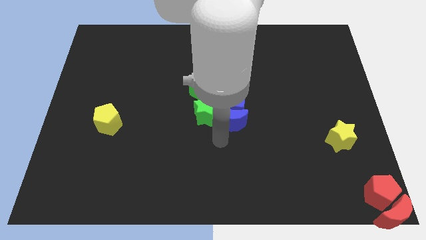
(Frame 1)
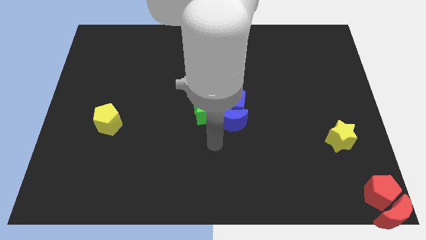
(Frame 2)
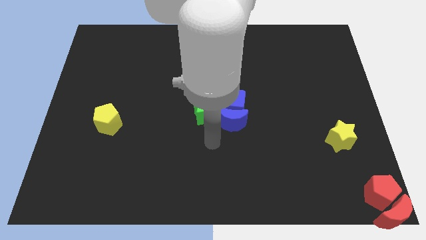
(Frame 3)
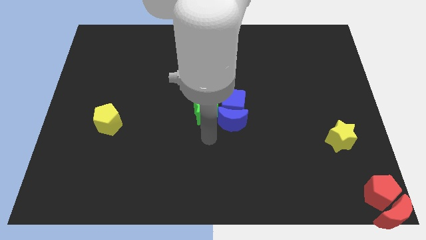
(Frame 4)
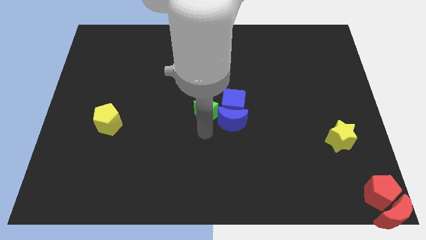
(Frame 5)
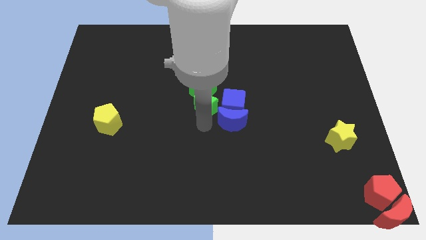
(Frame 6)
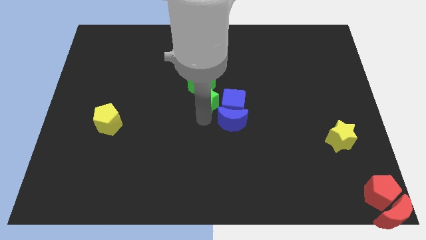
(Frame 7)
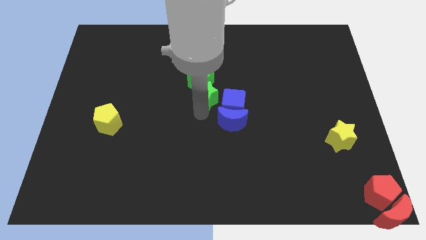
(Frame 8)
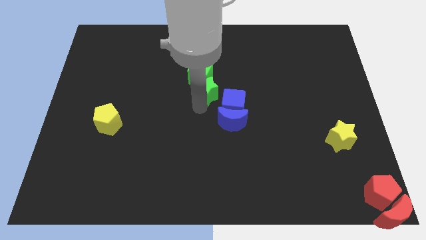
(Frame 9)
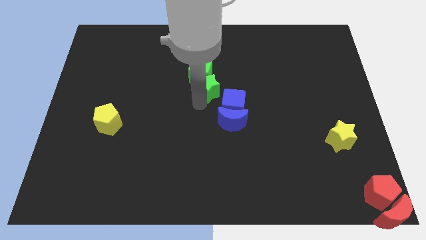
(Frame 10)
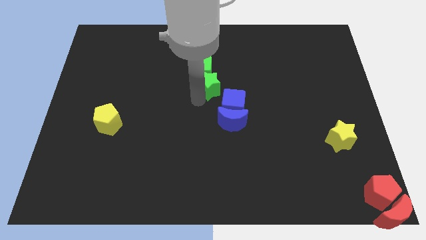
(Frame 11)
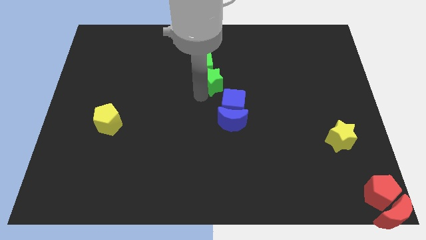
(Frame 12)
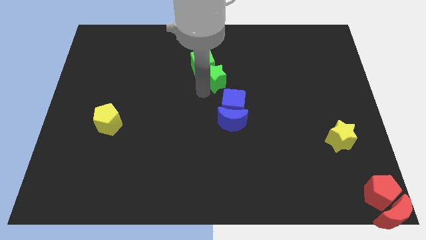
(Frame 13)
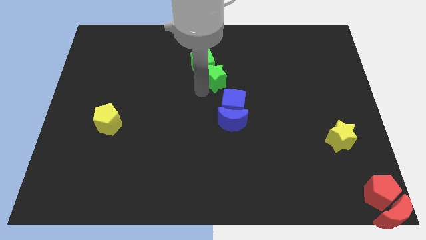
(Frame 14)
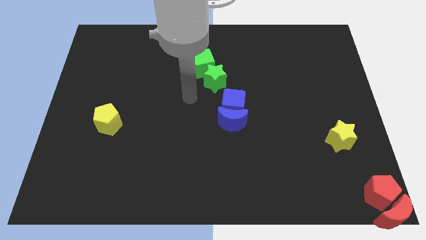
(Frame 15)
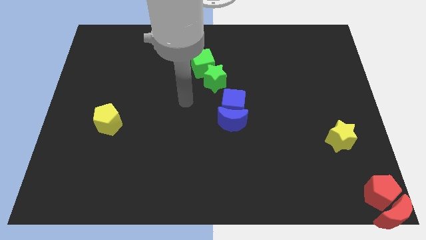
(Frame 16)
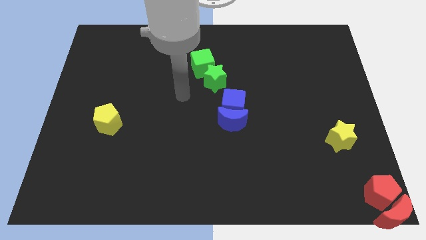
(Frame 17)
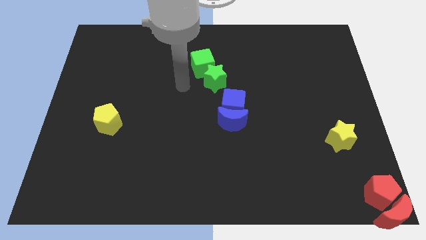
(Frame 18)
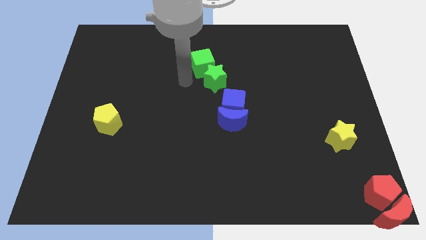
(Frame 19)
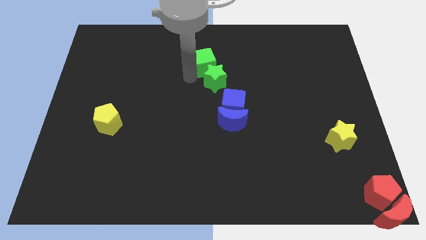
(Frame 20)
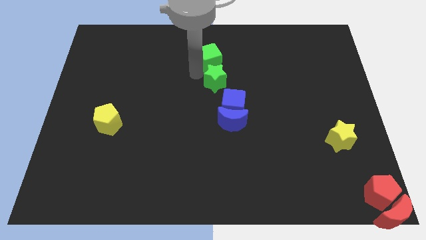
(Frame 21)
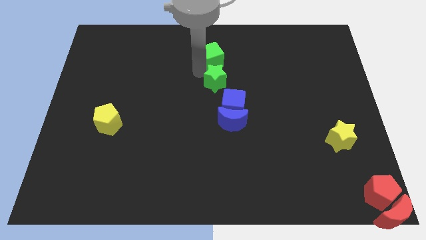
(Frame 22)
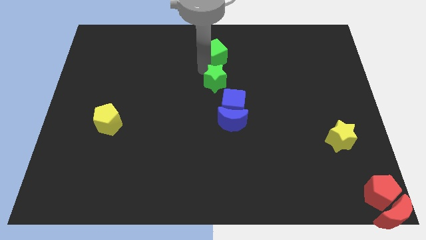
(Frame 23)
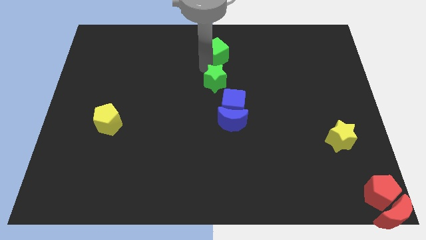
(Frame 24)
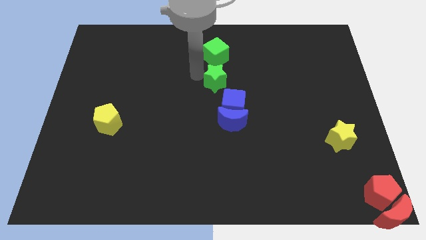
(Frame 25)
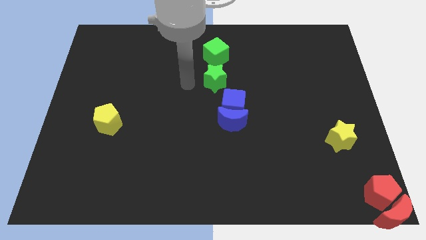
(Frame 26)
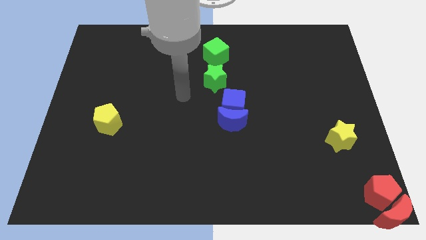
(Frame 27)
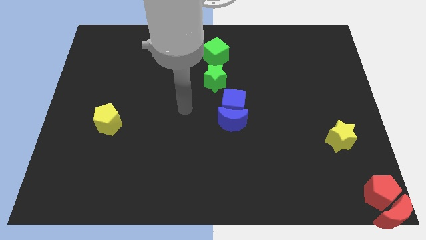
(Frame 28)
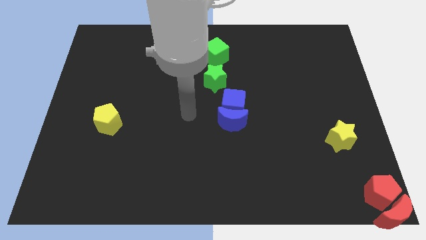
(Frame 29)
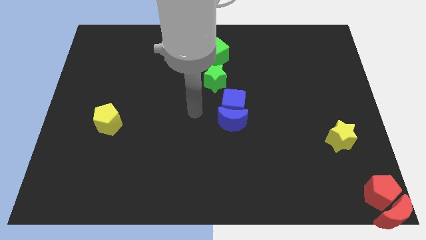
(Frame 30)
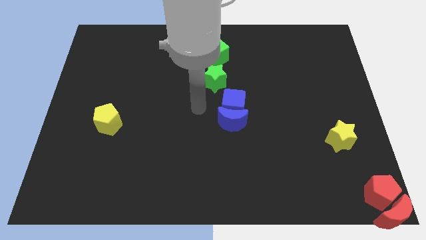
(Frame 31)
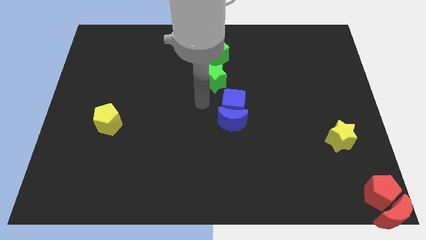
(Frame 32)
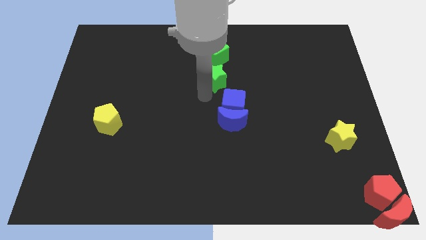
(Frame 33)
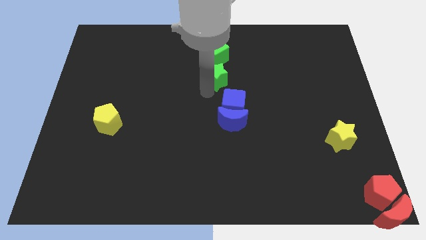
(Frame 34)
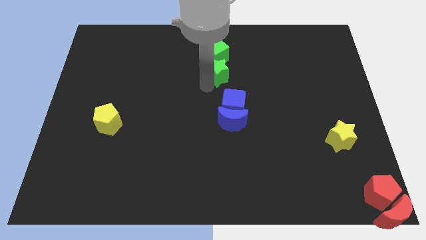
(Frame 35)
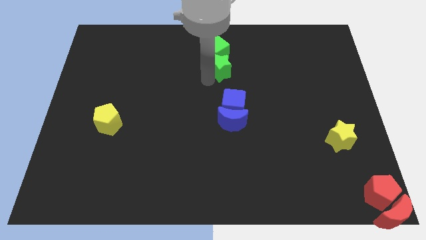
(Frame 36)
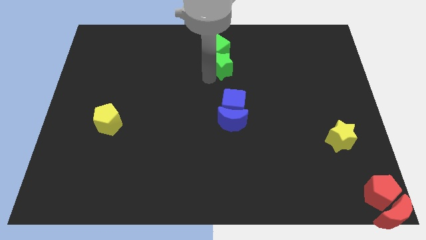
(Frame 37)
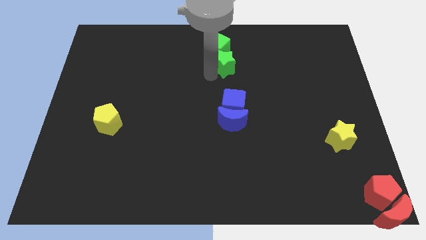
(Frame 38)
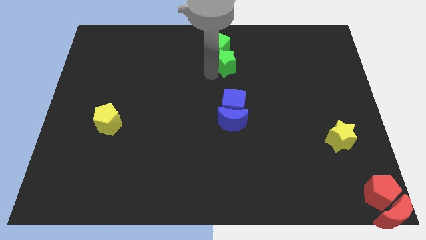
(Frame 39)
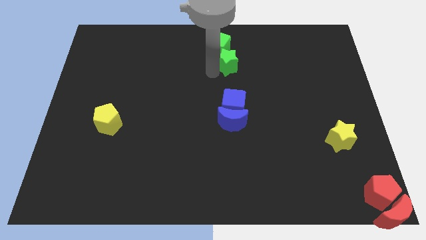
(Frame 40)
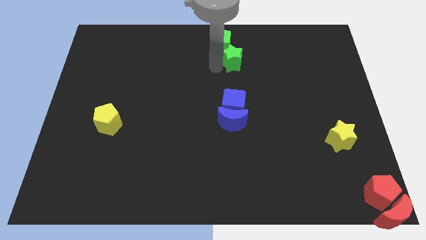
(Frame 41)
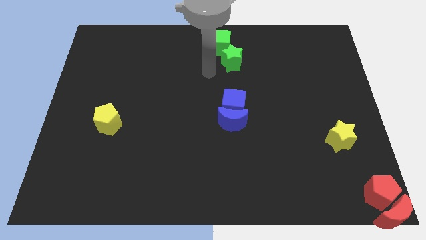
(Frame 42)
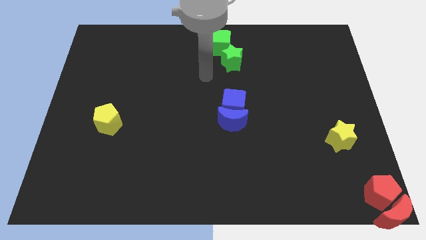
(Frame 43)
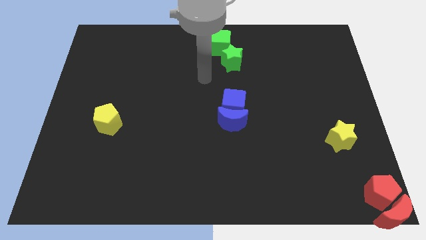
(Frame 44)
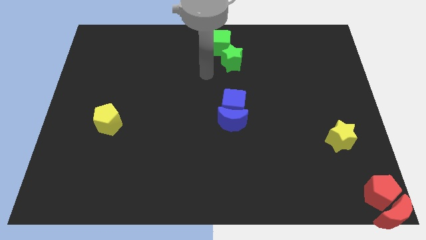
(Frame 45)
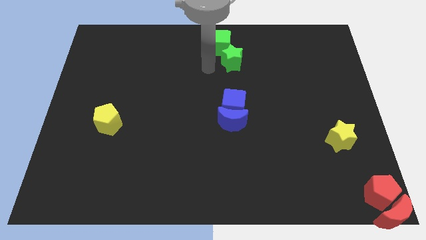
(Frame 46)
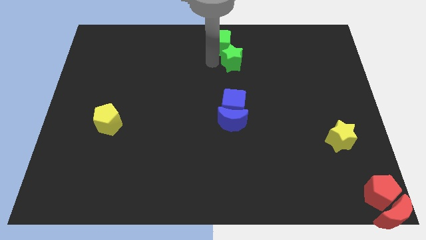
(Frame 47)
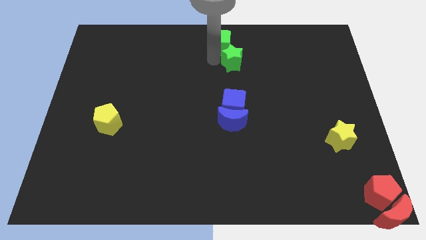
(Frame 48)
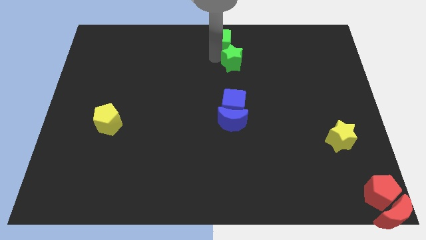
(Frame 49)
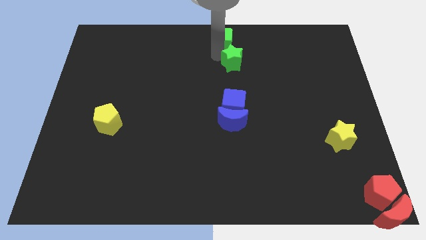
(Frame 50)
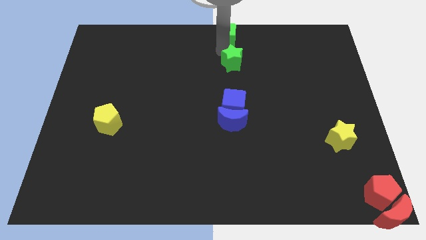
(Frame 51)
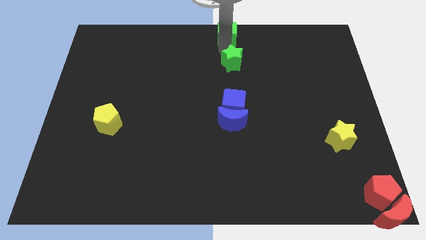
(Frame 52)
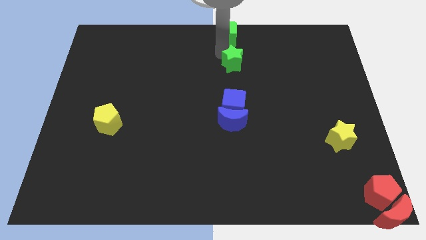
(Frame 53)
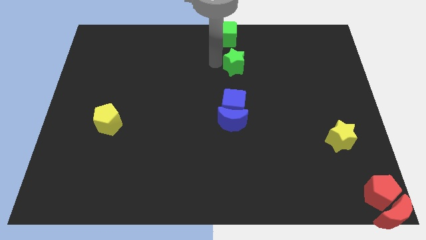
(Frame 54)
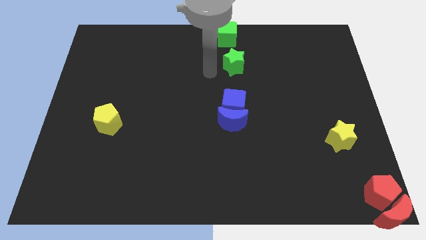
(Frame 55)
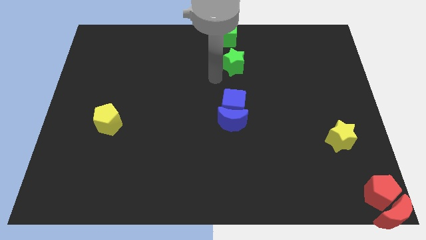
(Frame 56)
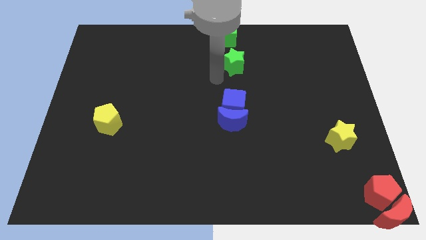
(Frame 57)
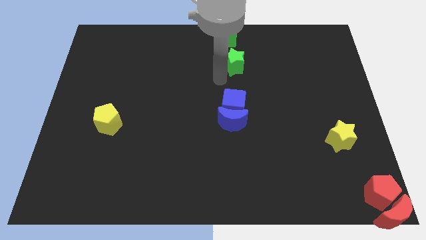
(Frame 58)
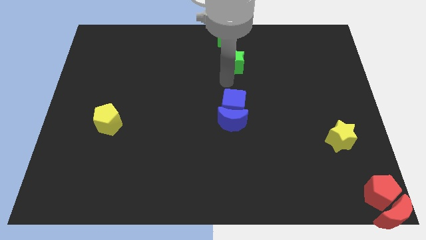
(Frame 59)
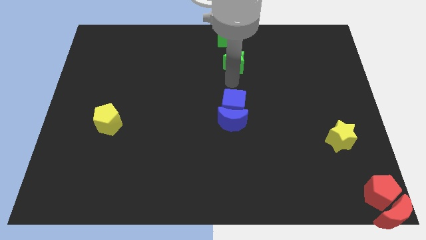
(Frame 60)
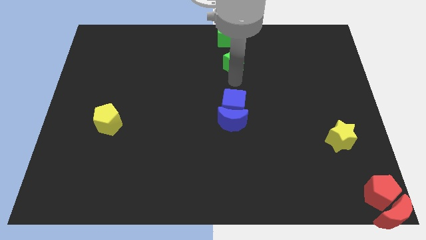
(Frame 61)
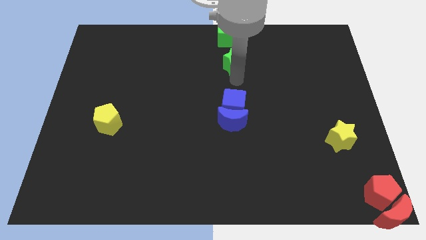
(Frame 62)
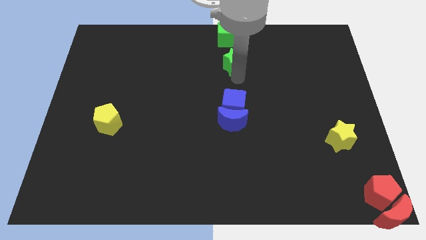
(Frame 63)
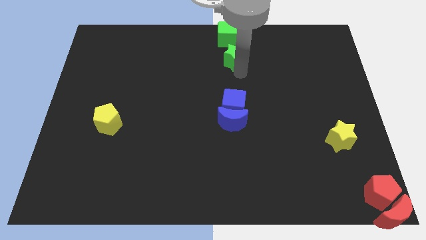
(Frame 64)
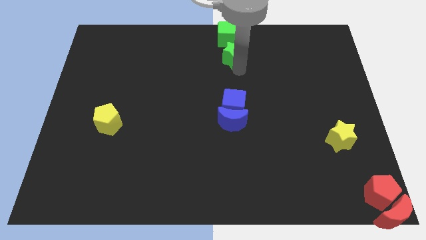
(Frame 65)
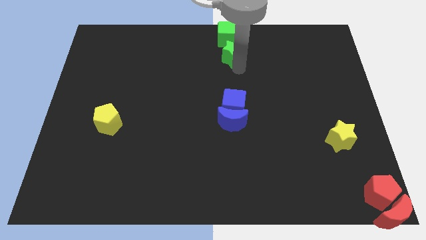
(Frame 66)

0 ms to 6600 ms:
push the green blocks to the top of the blue blocks

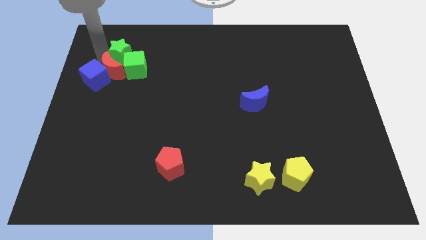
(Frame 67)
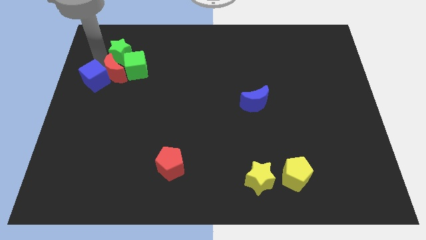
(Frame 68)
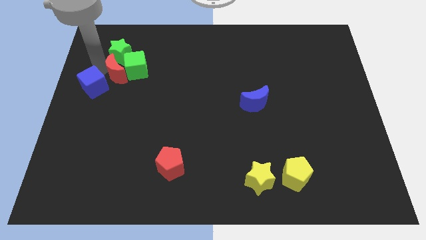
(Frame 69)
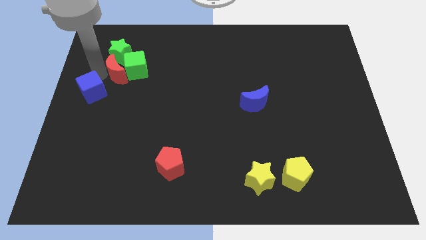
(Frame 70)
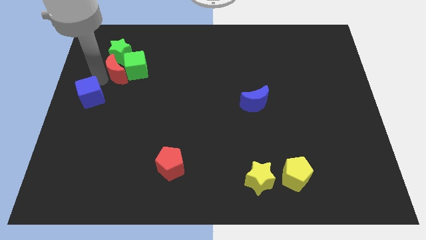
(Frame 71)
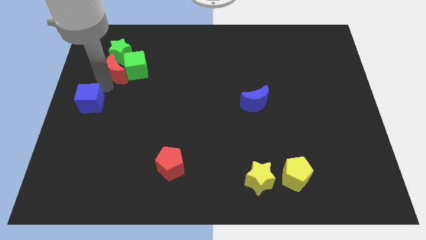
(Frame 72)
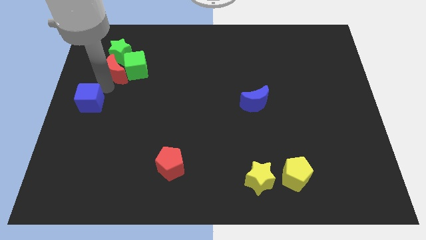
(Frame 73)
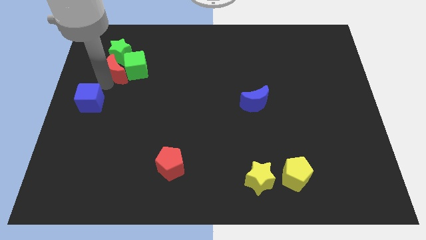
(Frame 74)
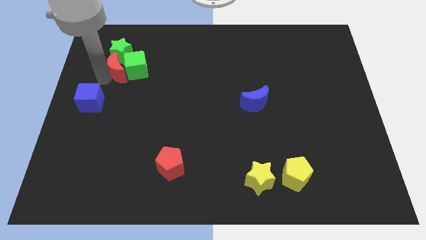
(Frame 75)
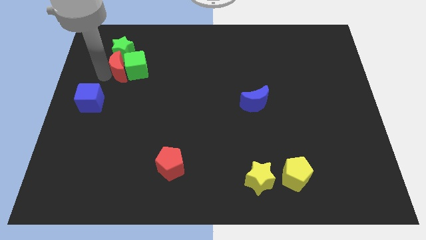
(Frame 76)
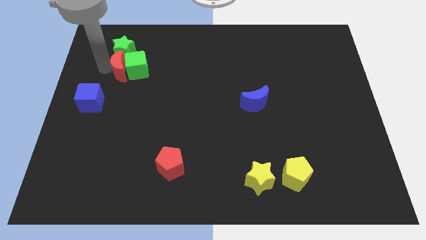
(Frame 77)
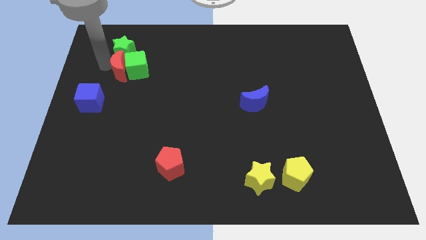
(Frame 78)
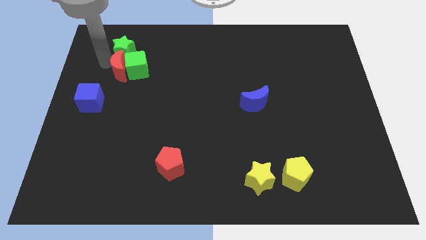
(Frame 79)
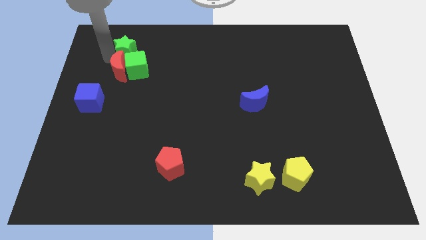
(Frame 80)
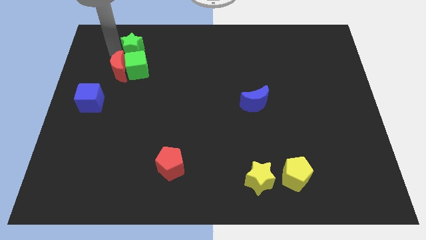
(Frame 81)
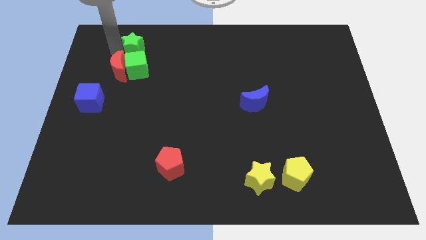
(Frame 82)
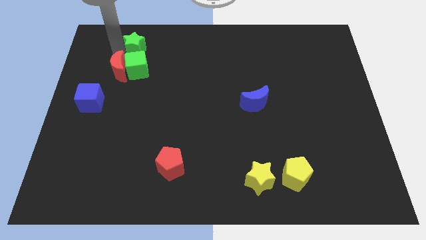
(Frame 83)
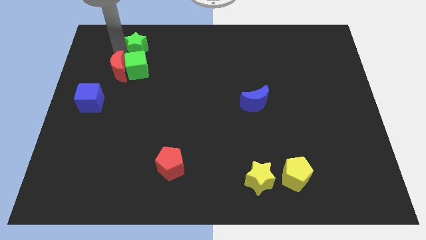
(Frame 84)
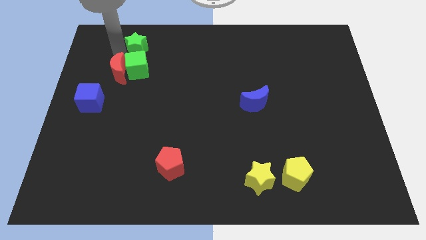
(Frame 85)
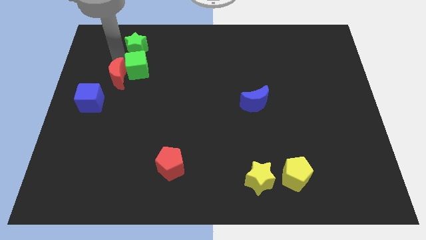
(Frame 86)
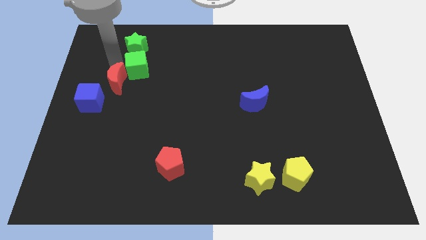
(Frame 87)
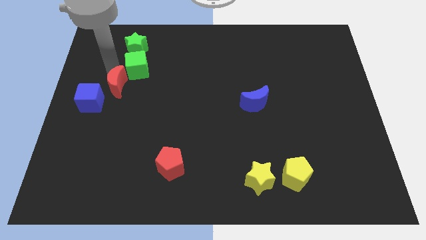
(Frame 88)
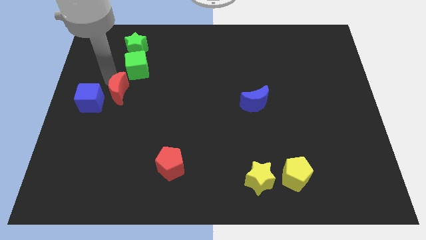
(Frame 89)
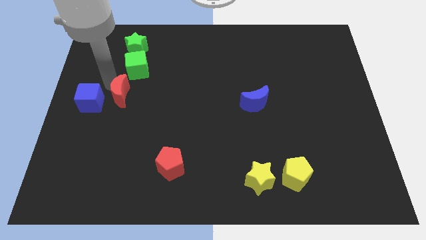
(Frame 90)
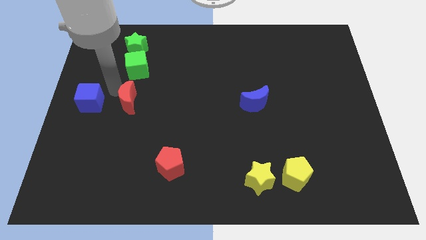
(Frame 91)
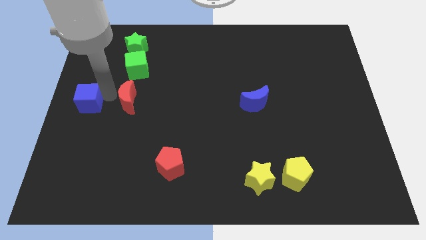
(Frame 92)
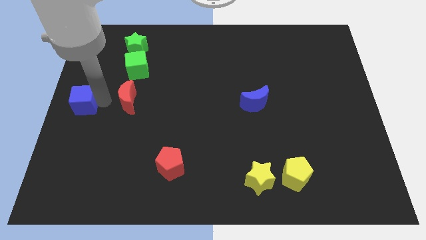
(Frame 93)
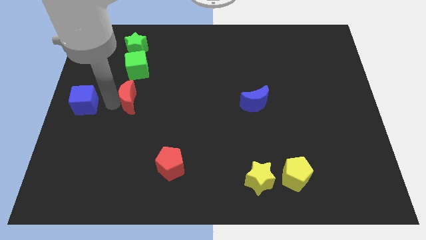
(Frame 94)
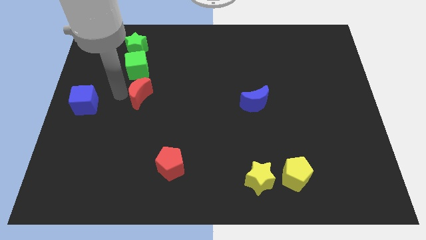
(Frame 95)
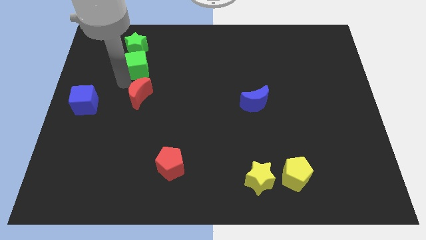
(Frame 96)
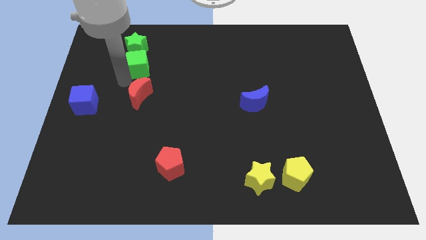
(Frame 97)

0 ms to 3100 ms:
place red moon below green cube
